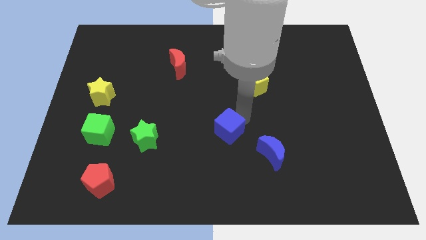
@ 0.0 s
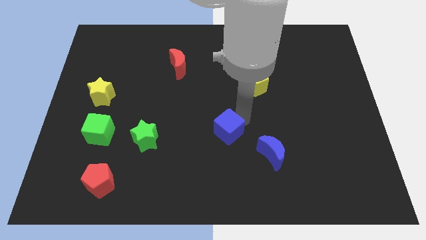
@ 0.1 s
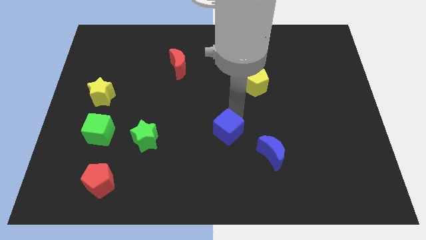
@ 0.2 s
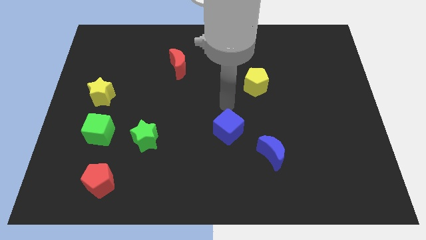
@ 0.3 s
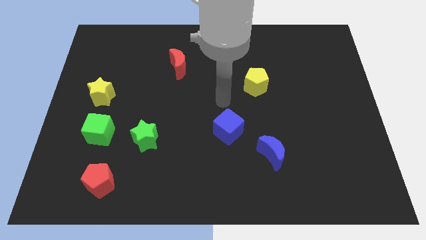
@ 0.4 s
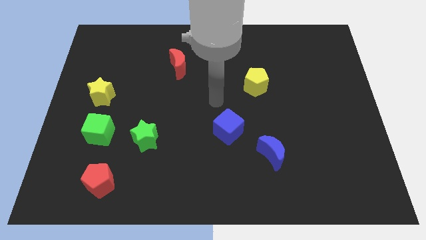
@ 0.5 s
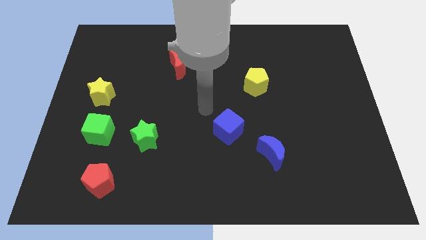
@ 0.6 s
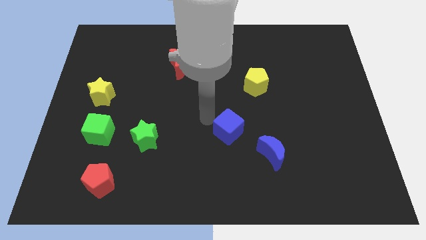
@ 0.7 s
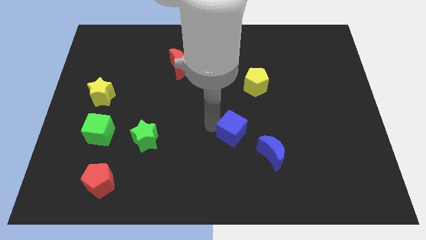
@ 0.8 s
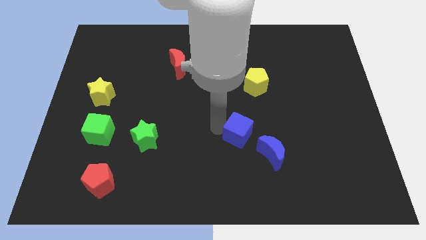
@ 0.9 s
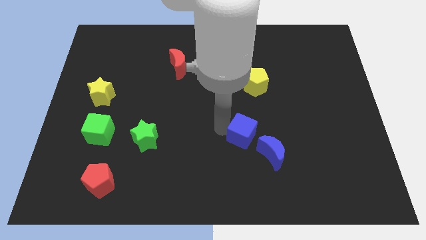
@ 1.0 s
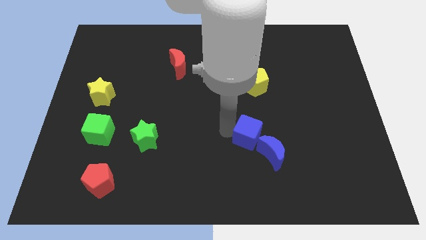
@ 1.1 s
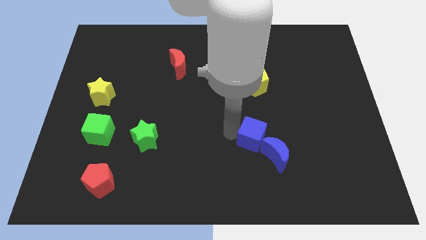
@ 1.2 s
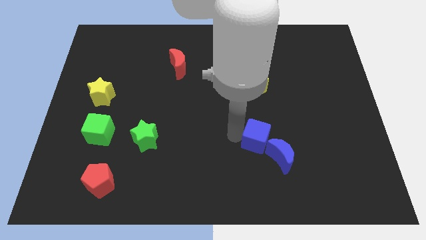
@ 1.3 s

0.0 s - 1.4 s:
slide the blue cube into the left side of the blue crescent

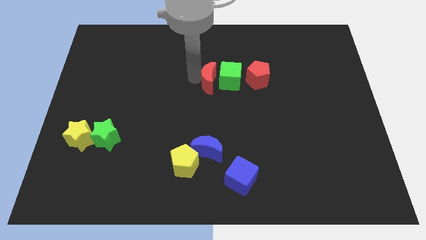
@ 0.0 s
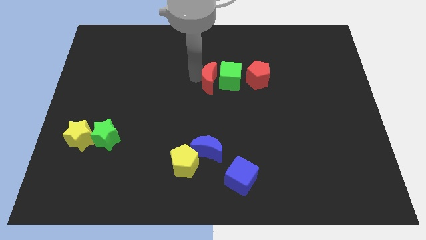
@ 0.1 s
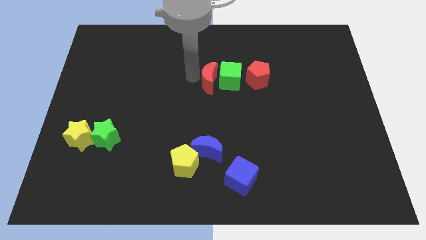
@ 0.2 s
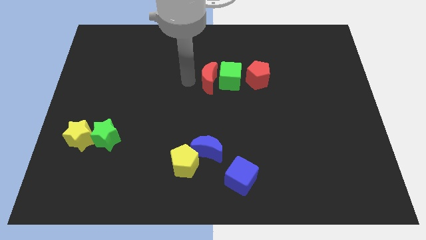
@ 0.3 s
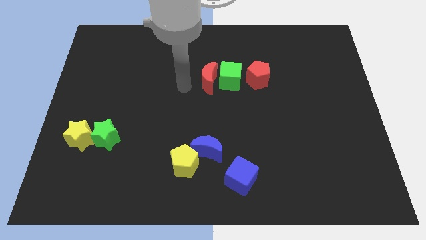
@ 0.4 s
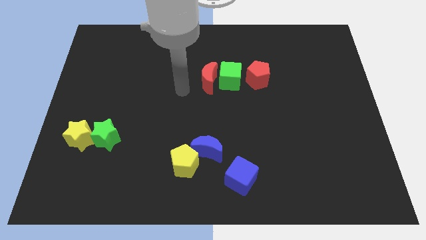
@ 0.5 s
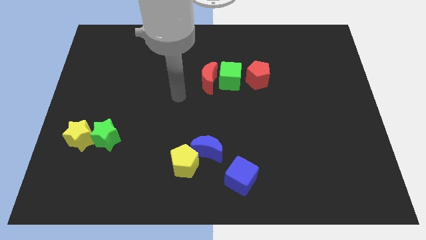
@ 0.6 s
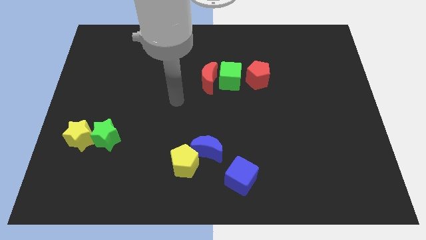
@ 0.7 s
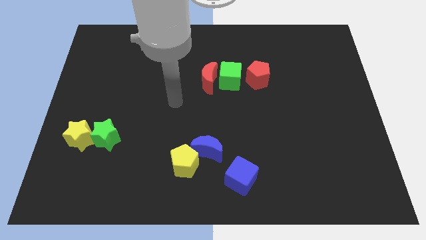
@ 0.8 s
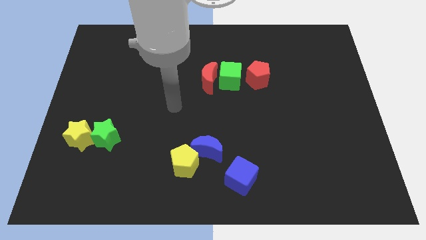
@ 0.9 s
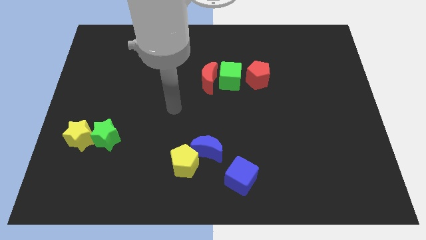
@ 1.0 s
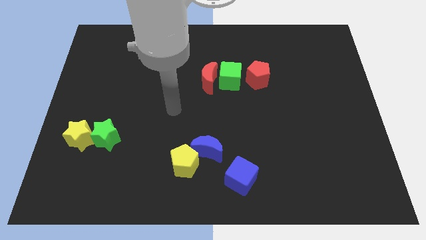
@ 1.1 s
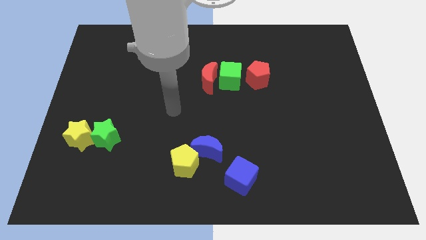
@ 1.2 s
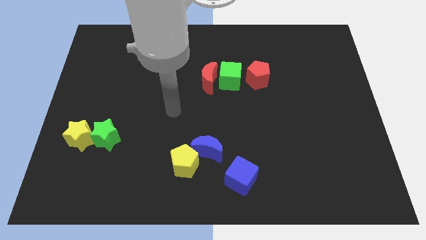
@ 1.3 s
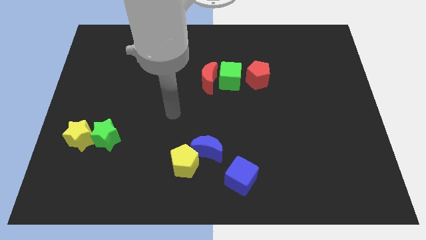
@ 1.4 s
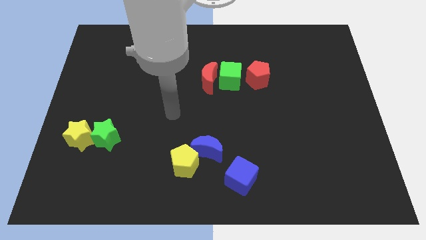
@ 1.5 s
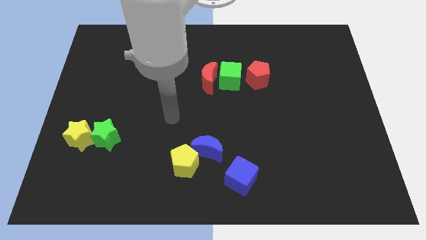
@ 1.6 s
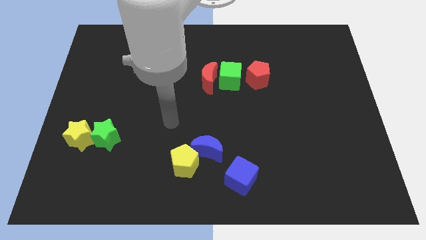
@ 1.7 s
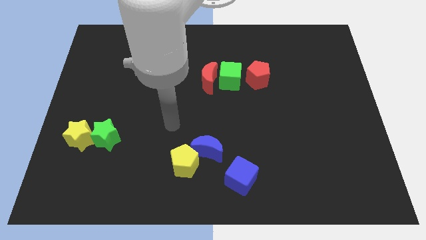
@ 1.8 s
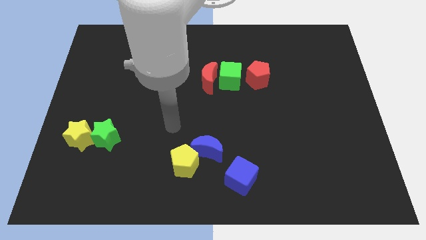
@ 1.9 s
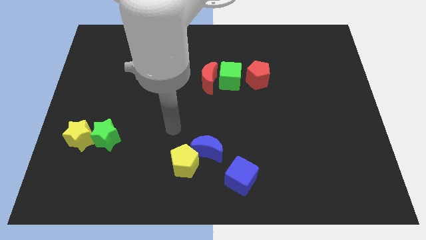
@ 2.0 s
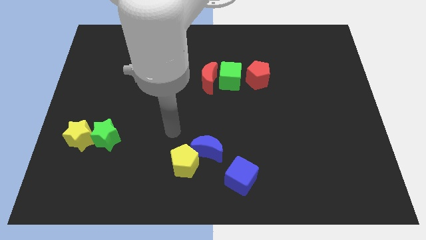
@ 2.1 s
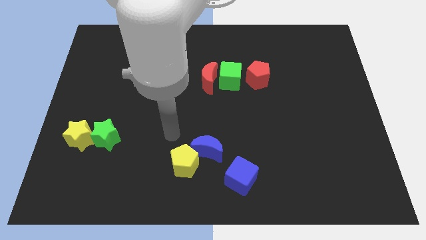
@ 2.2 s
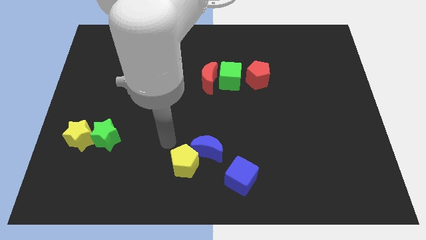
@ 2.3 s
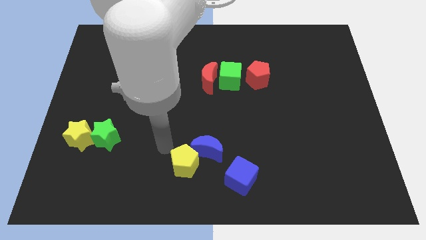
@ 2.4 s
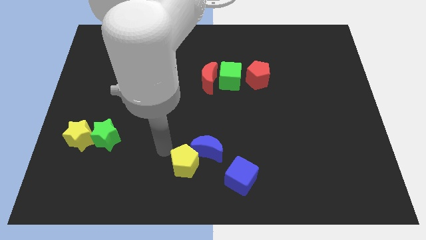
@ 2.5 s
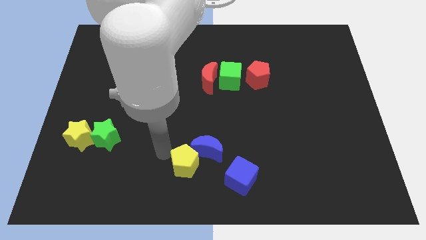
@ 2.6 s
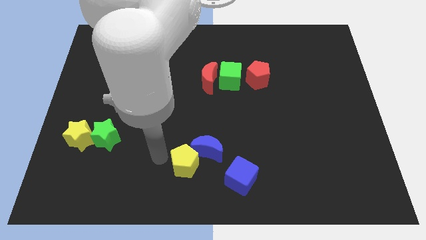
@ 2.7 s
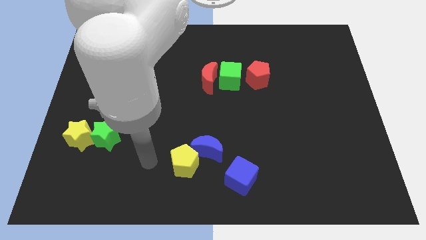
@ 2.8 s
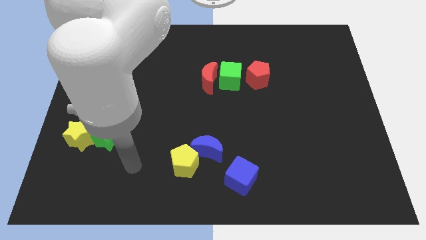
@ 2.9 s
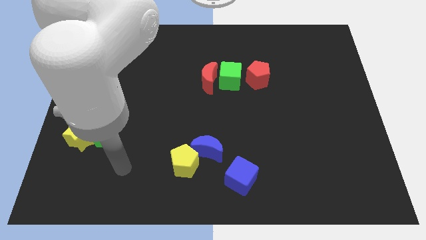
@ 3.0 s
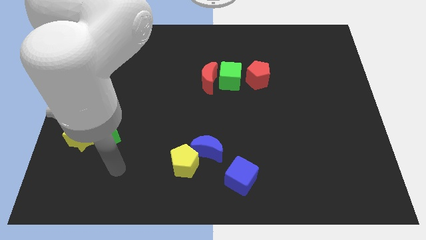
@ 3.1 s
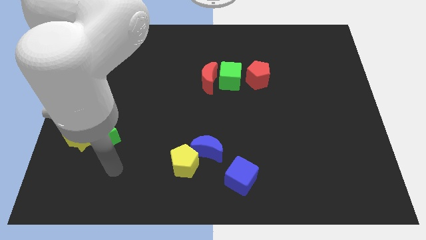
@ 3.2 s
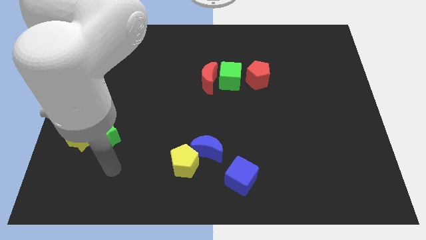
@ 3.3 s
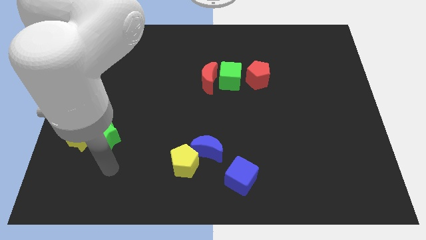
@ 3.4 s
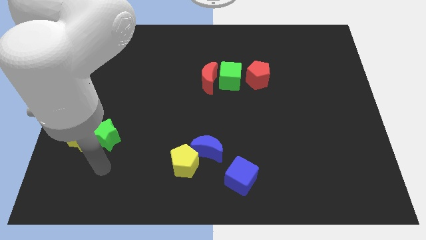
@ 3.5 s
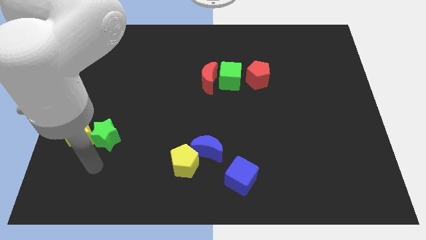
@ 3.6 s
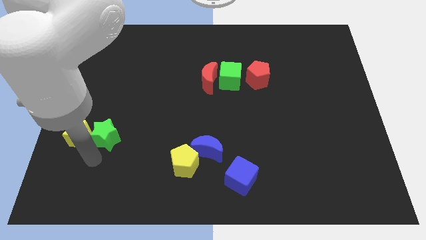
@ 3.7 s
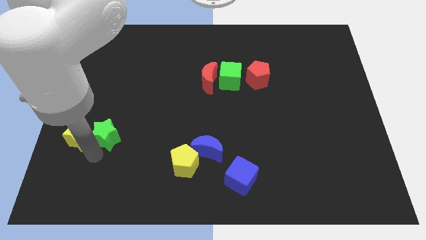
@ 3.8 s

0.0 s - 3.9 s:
place the arm down to the green star

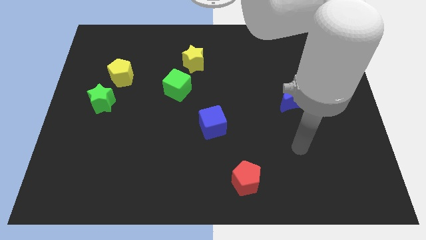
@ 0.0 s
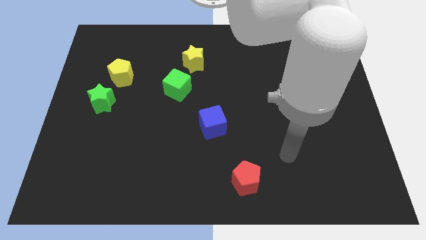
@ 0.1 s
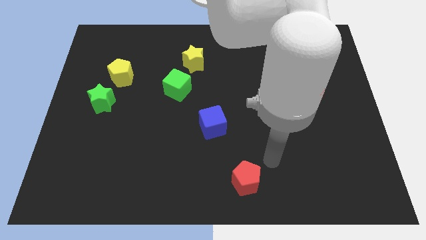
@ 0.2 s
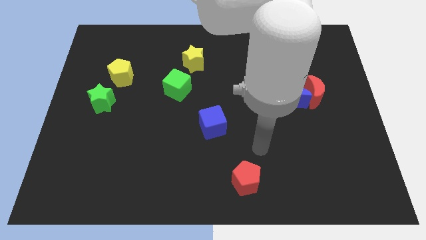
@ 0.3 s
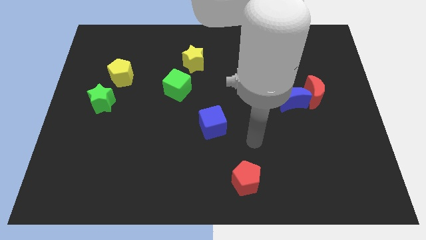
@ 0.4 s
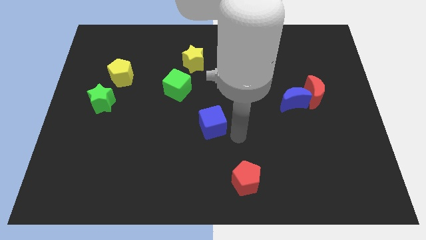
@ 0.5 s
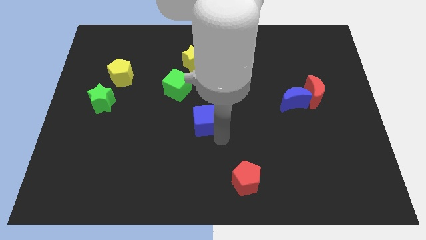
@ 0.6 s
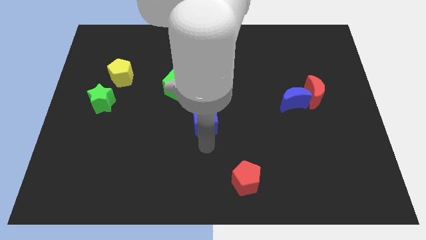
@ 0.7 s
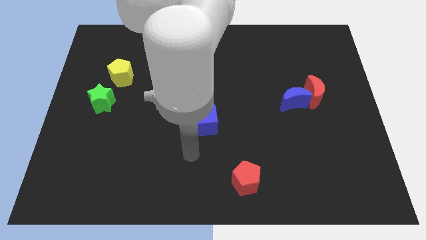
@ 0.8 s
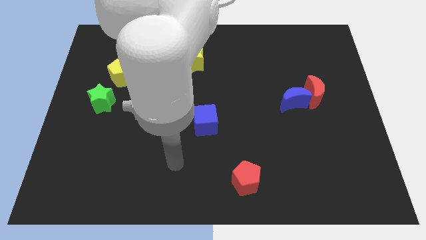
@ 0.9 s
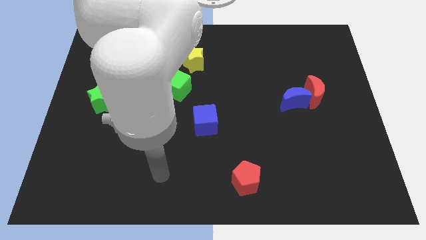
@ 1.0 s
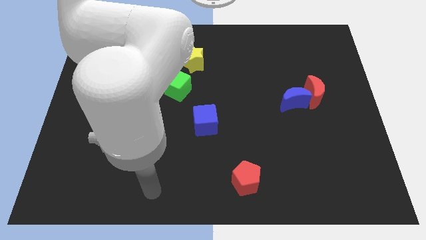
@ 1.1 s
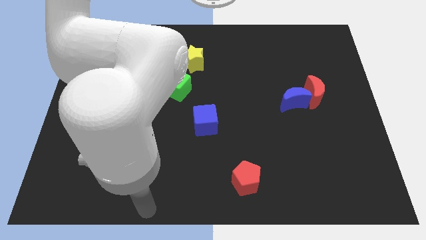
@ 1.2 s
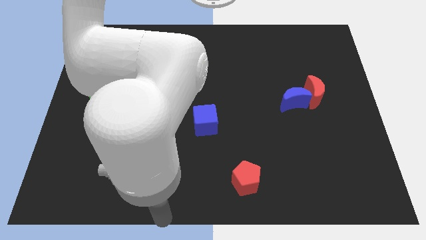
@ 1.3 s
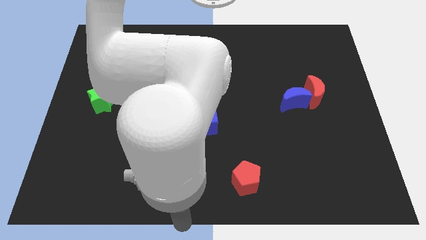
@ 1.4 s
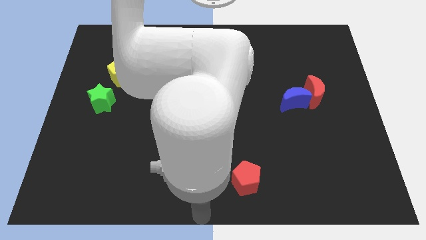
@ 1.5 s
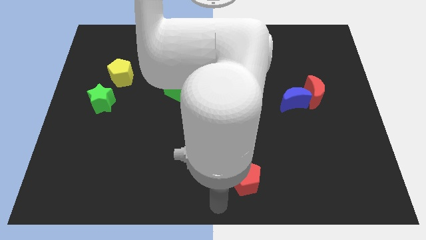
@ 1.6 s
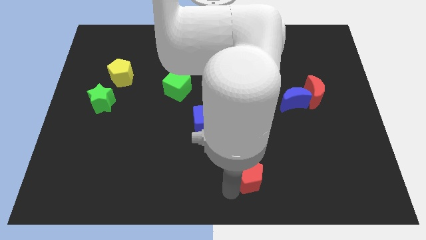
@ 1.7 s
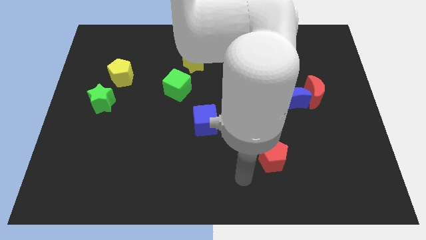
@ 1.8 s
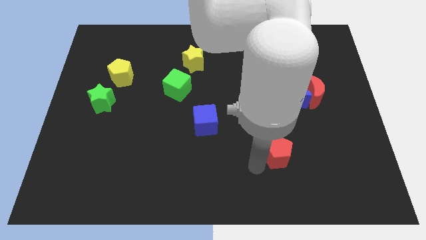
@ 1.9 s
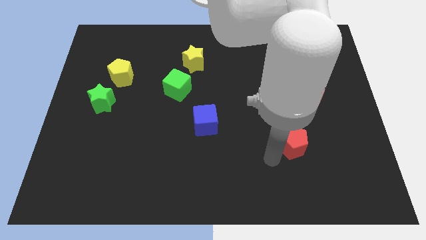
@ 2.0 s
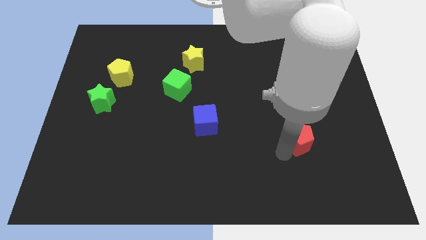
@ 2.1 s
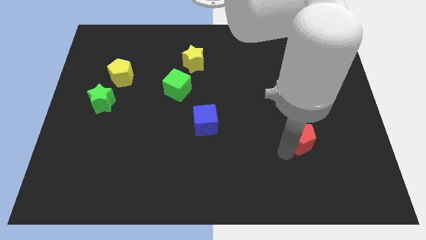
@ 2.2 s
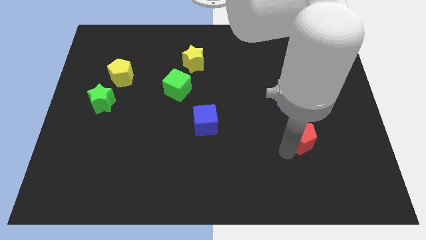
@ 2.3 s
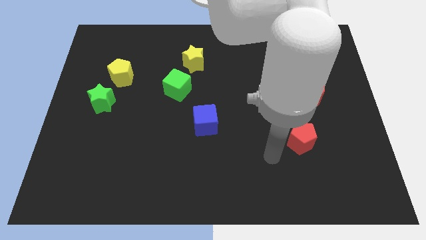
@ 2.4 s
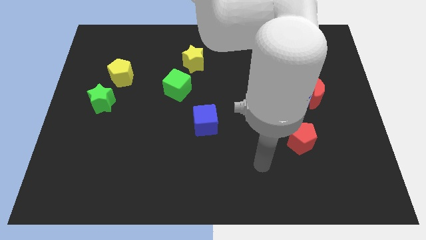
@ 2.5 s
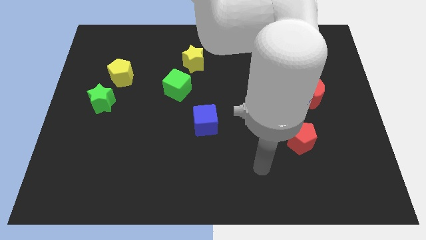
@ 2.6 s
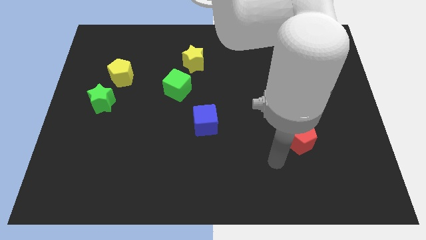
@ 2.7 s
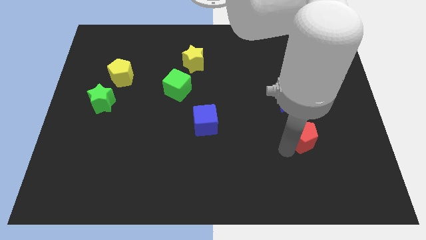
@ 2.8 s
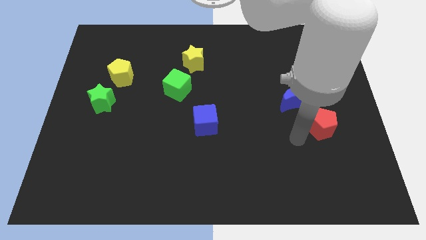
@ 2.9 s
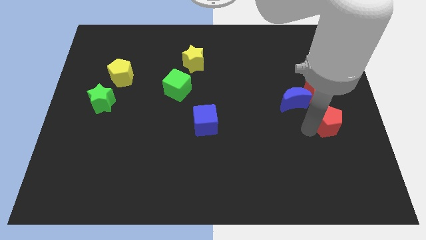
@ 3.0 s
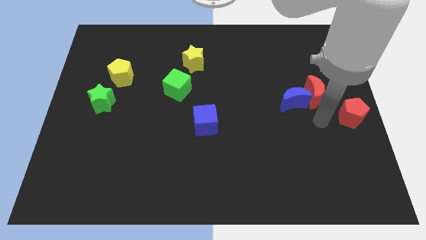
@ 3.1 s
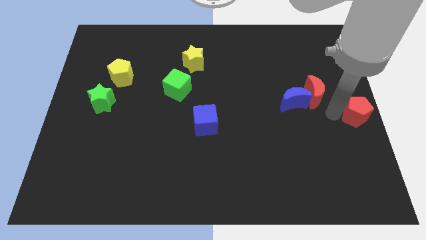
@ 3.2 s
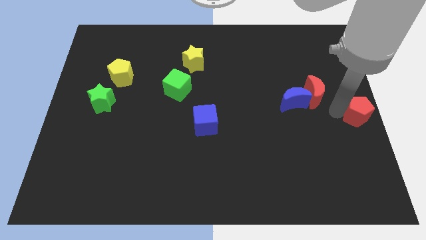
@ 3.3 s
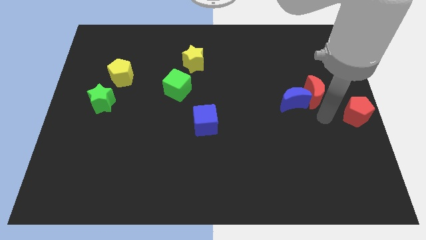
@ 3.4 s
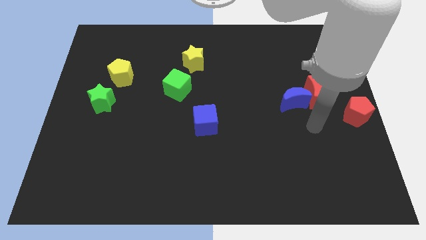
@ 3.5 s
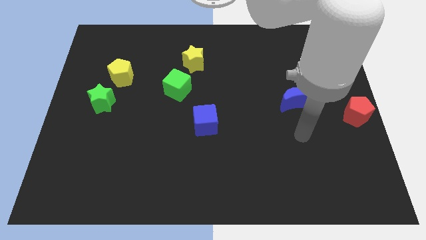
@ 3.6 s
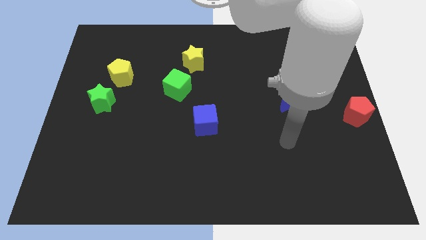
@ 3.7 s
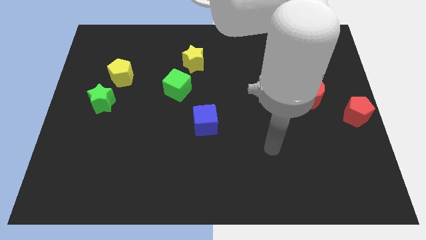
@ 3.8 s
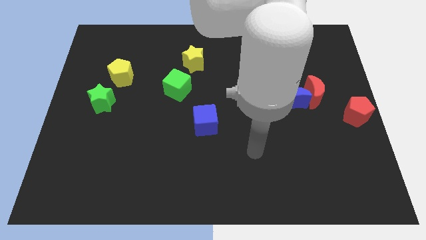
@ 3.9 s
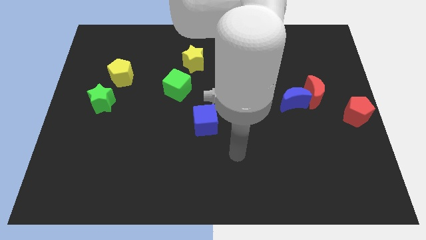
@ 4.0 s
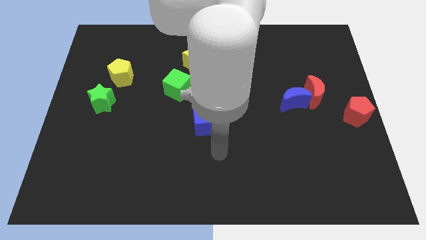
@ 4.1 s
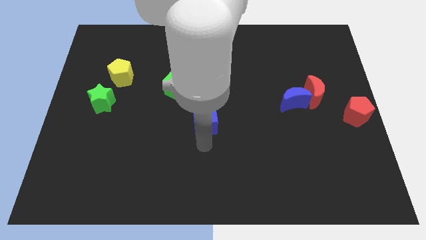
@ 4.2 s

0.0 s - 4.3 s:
push the red pentagon to the center right of the board
